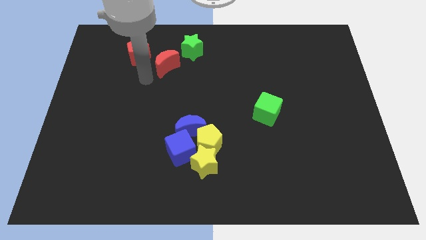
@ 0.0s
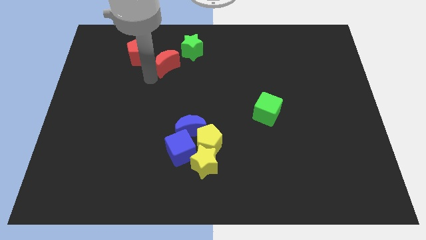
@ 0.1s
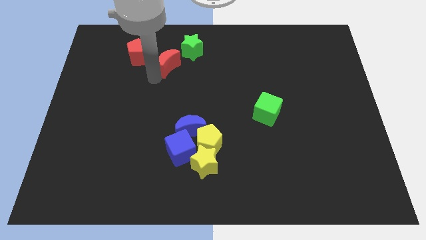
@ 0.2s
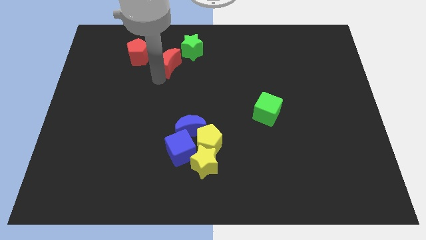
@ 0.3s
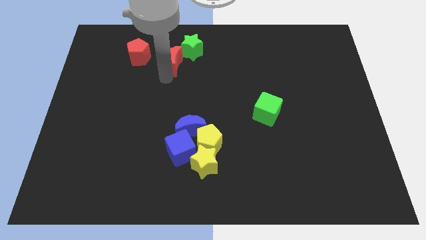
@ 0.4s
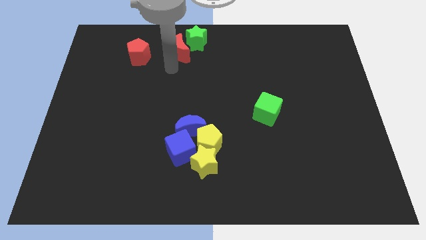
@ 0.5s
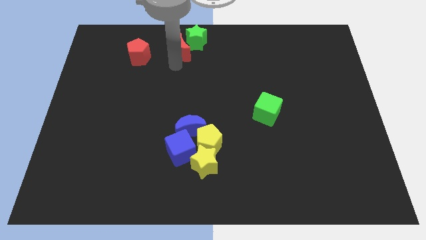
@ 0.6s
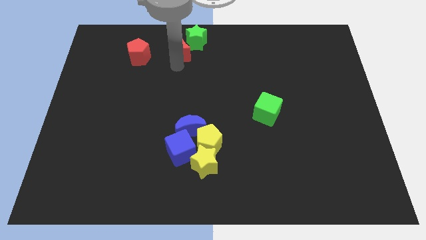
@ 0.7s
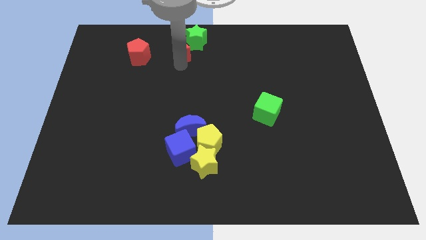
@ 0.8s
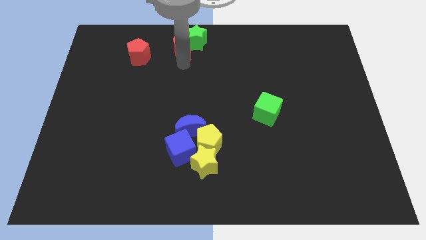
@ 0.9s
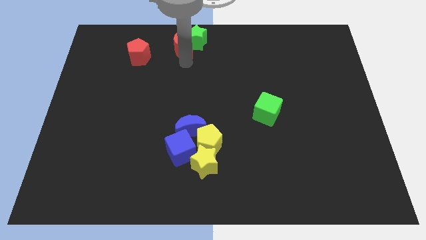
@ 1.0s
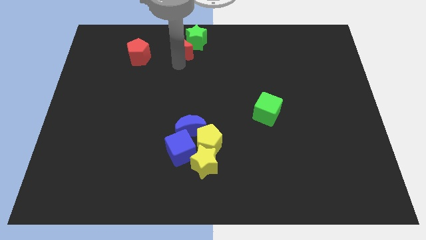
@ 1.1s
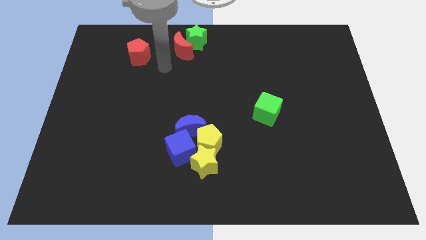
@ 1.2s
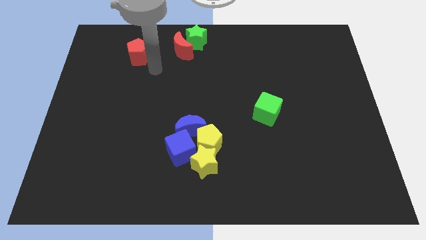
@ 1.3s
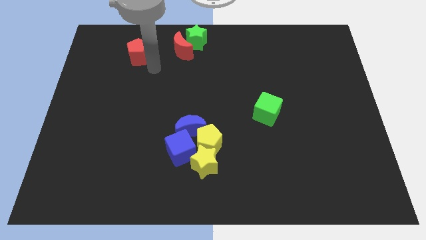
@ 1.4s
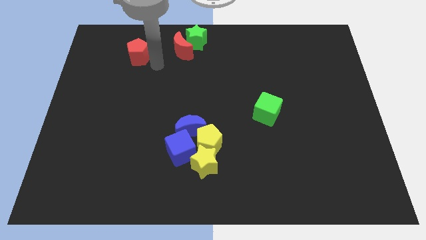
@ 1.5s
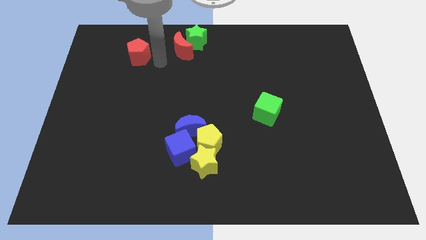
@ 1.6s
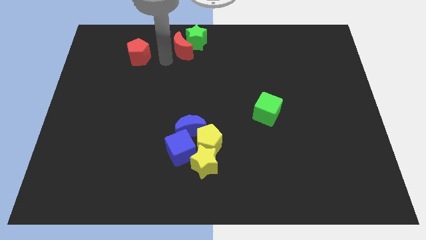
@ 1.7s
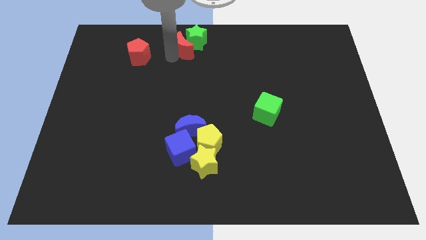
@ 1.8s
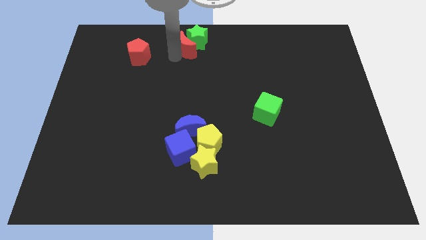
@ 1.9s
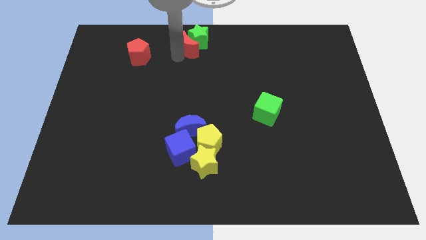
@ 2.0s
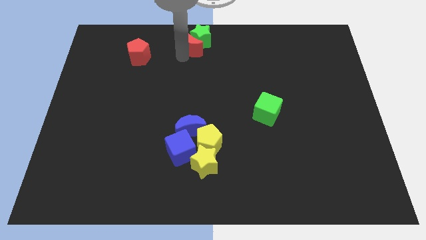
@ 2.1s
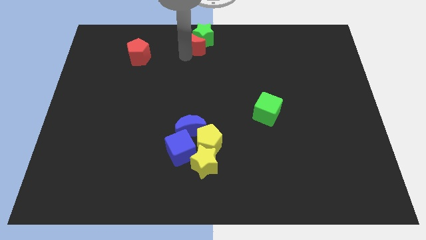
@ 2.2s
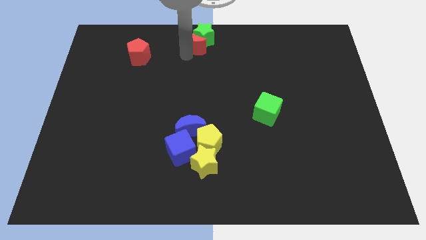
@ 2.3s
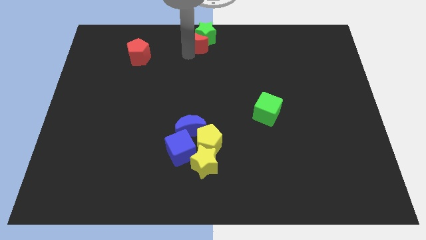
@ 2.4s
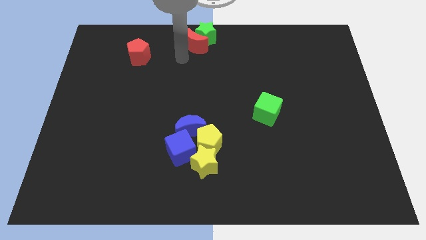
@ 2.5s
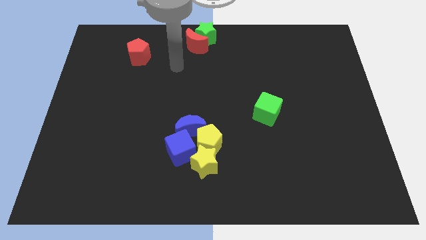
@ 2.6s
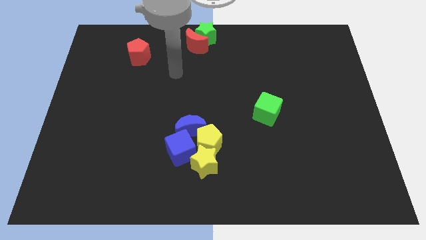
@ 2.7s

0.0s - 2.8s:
move the red crescent along with the green star to the top center of the board

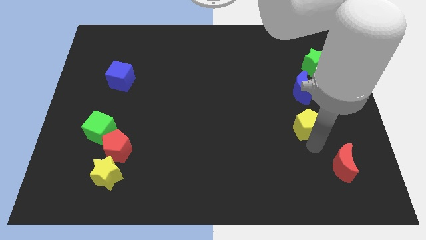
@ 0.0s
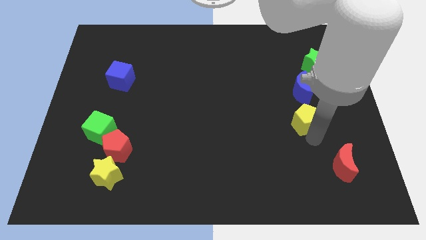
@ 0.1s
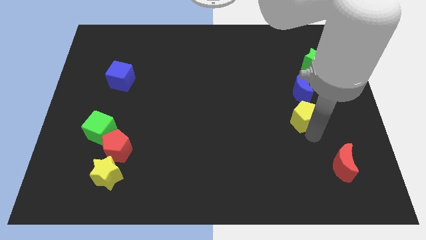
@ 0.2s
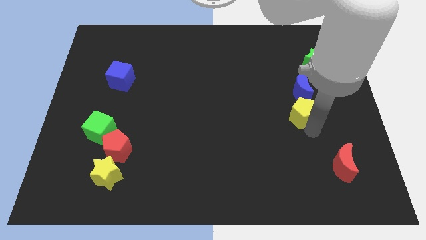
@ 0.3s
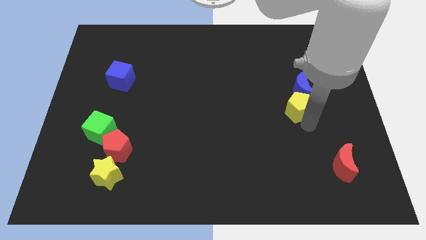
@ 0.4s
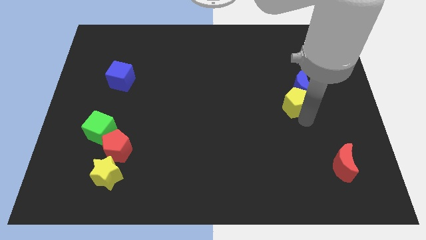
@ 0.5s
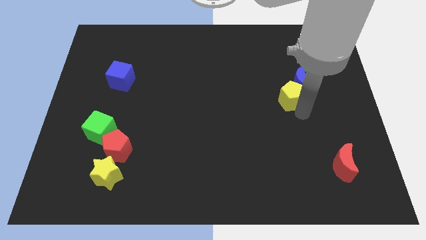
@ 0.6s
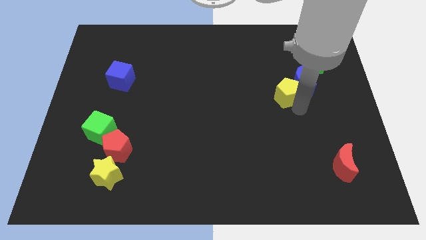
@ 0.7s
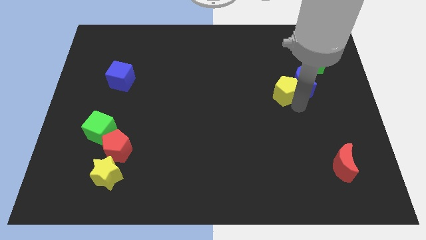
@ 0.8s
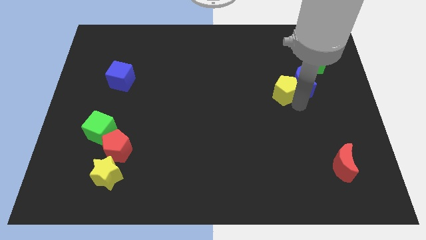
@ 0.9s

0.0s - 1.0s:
push the yellow pentagon towards the blue moon

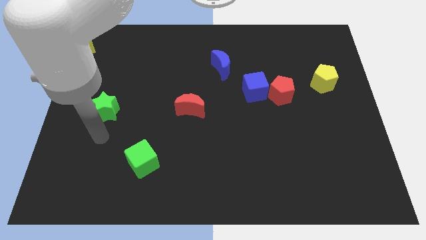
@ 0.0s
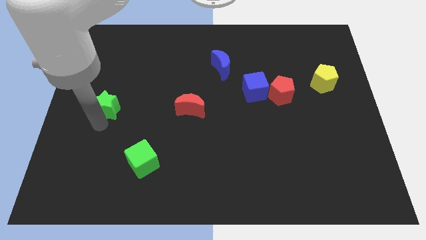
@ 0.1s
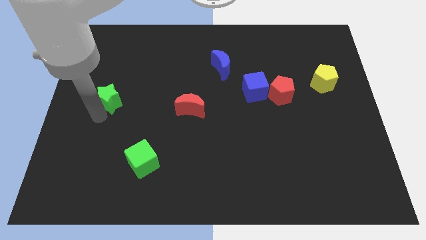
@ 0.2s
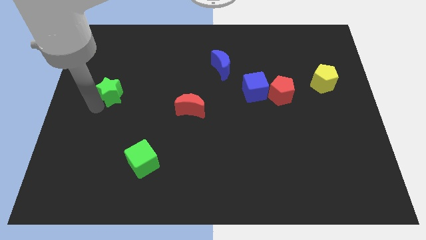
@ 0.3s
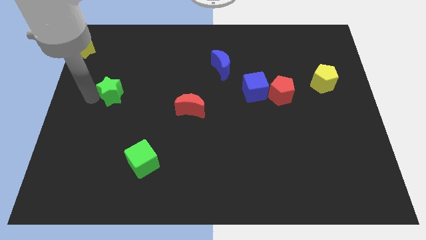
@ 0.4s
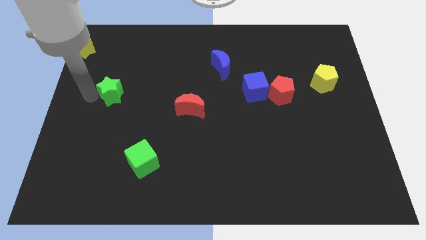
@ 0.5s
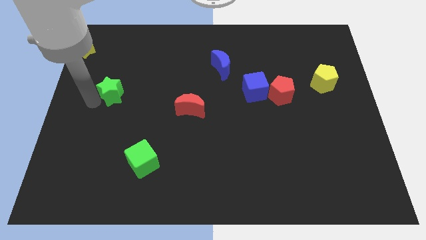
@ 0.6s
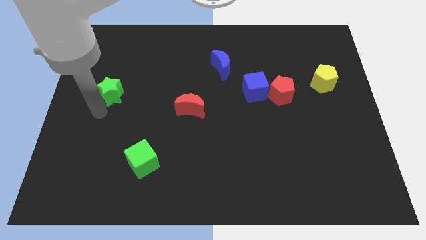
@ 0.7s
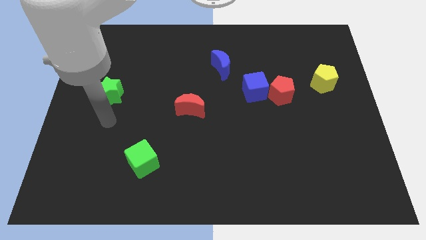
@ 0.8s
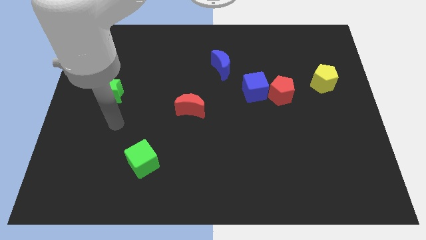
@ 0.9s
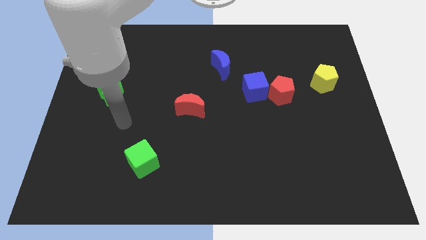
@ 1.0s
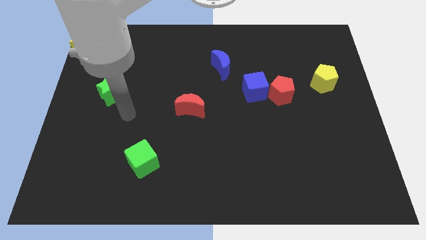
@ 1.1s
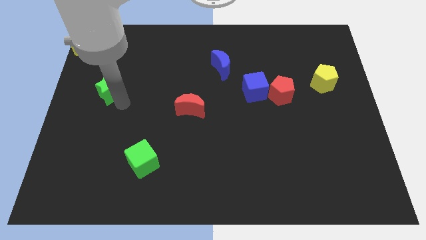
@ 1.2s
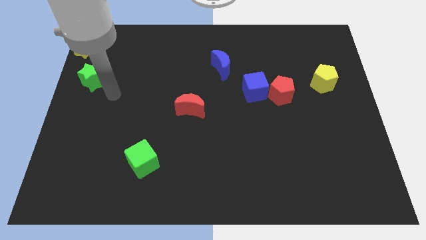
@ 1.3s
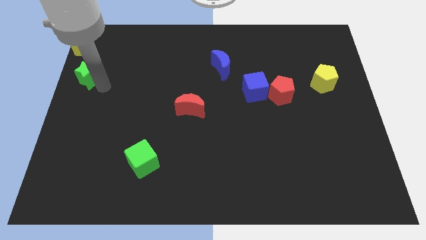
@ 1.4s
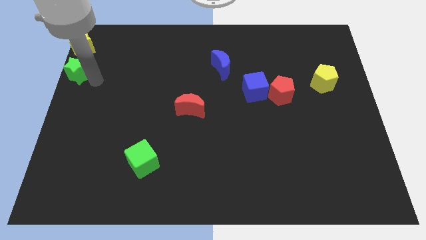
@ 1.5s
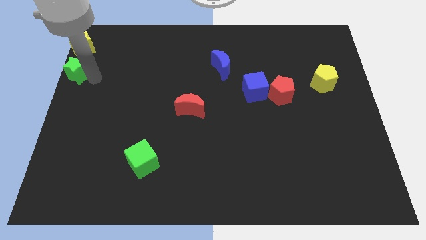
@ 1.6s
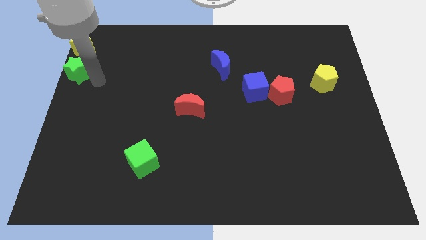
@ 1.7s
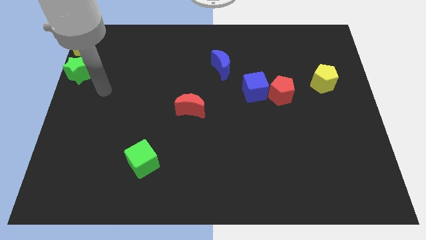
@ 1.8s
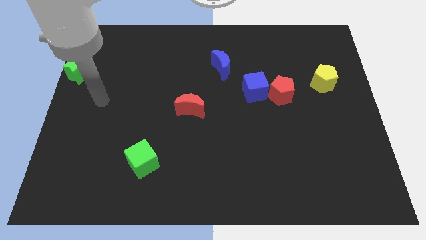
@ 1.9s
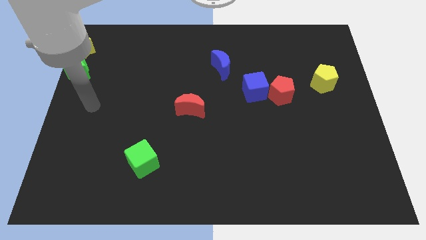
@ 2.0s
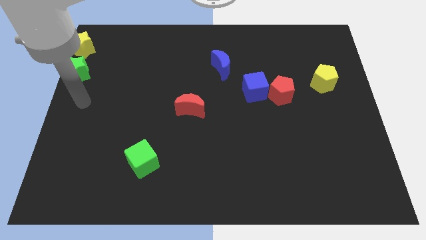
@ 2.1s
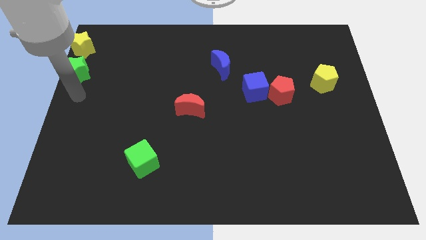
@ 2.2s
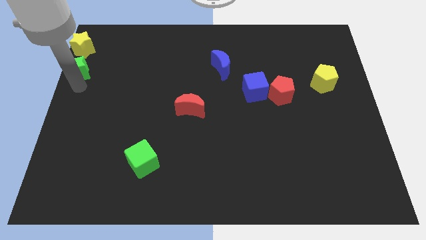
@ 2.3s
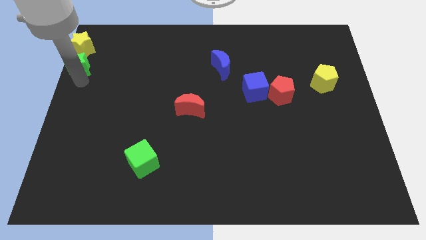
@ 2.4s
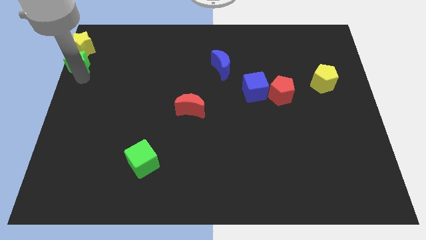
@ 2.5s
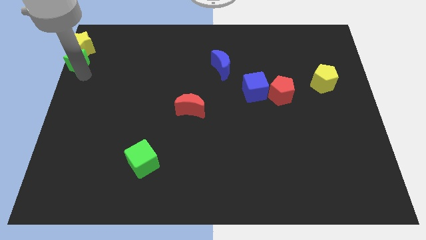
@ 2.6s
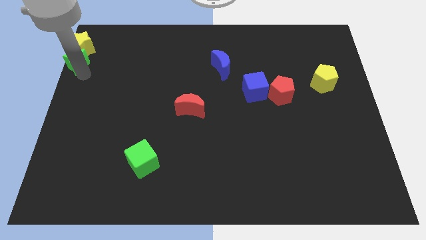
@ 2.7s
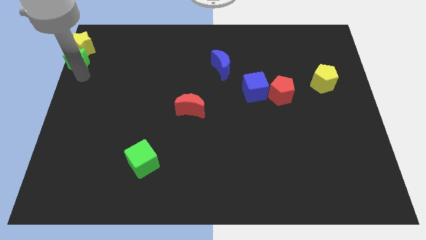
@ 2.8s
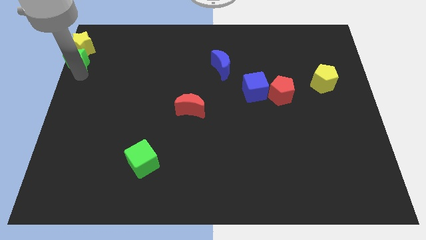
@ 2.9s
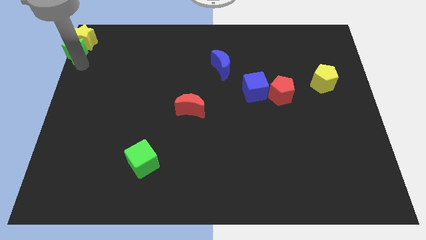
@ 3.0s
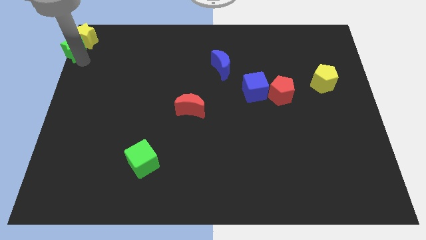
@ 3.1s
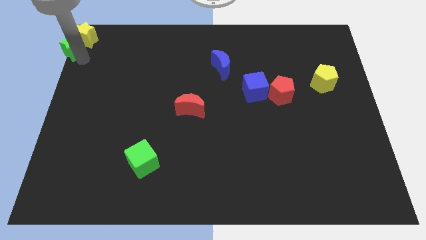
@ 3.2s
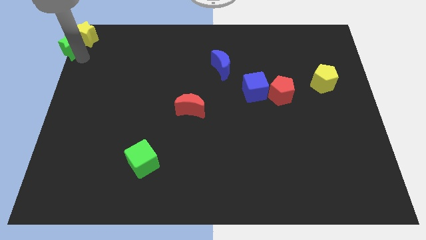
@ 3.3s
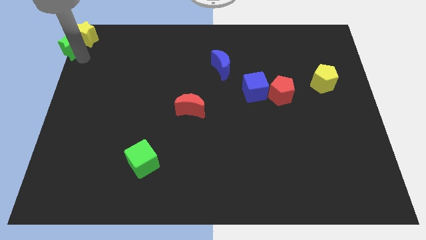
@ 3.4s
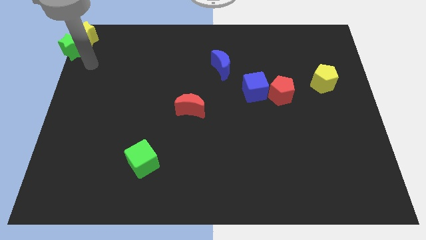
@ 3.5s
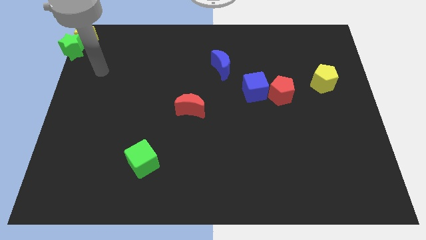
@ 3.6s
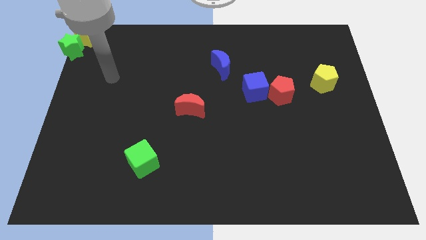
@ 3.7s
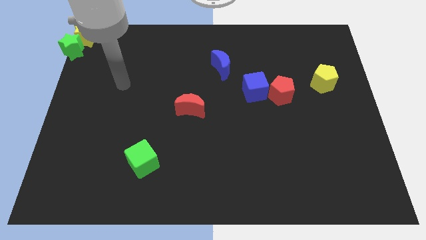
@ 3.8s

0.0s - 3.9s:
move green star into yellow star

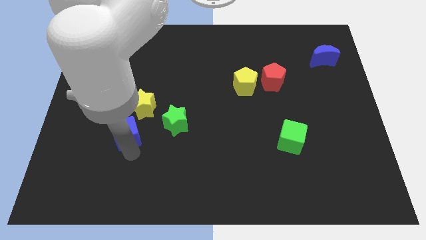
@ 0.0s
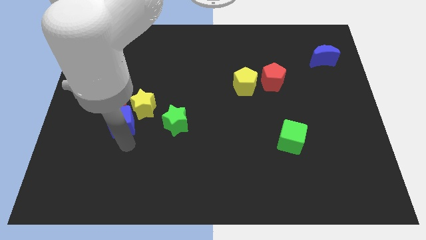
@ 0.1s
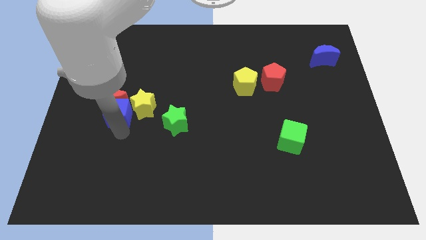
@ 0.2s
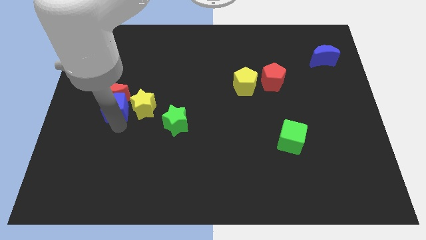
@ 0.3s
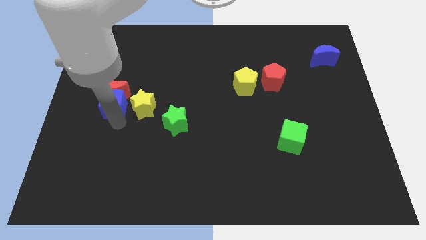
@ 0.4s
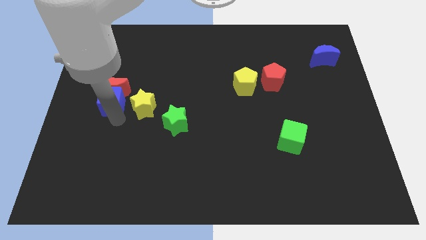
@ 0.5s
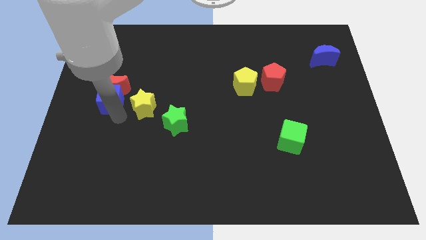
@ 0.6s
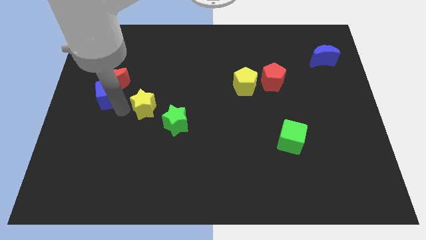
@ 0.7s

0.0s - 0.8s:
push the blue cube below the red crescent

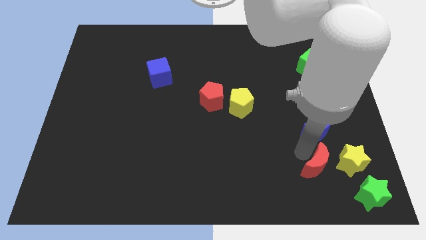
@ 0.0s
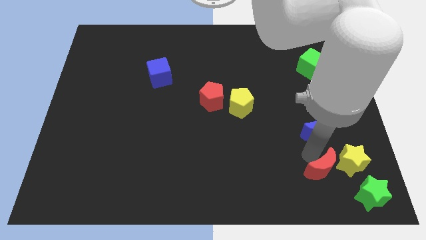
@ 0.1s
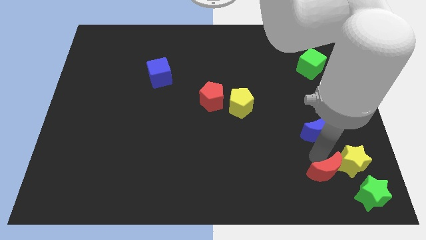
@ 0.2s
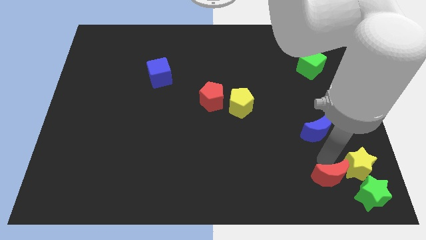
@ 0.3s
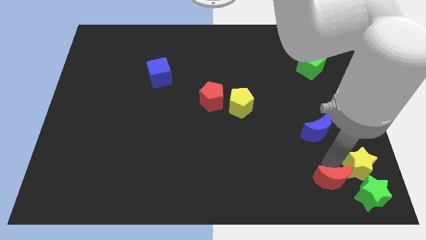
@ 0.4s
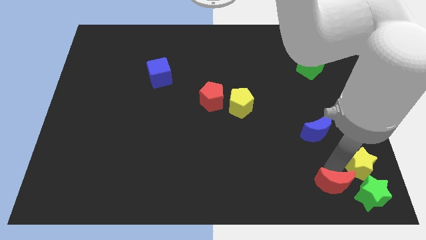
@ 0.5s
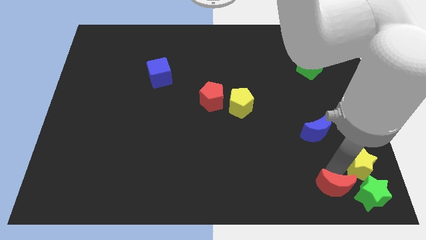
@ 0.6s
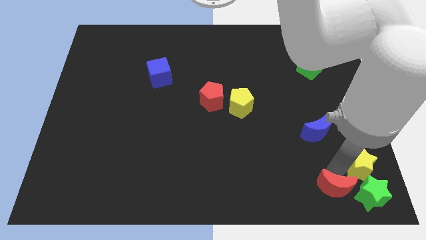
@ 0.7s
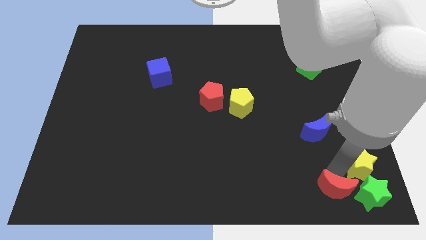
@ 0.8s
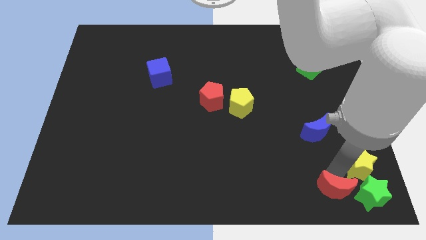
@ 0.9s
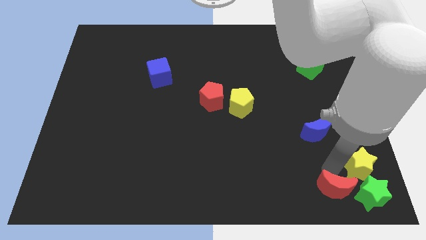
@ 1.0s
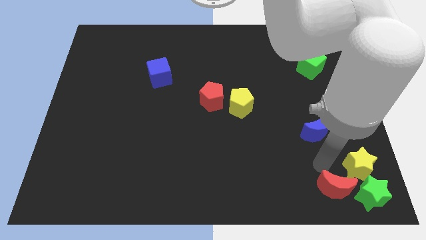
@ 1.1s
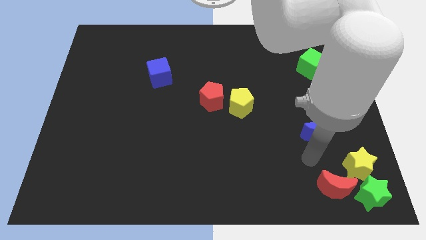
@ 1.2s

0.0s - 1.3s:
move red moon to the top left of the green star
